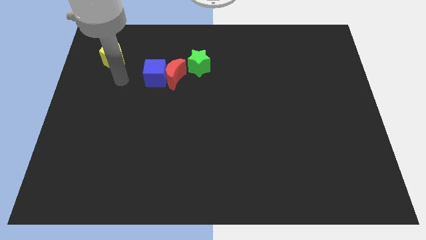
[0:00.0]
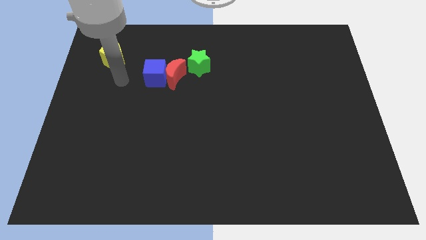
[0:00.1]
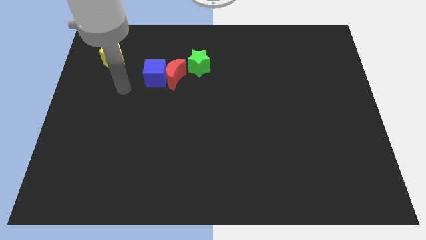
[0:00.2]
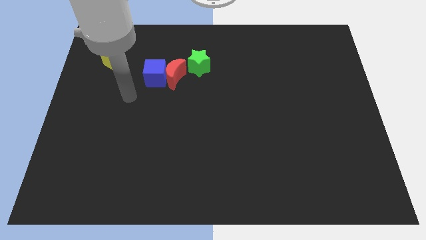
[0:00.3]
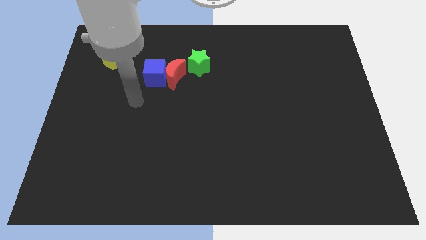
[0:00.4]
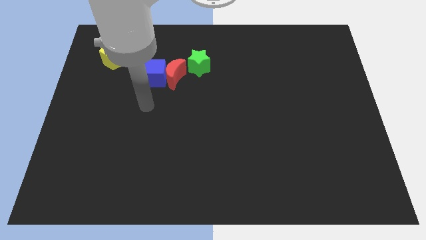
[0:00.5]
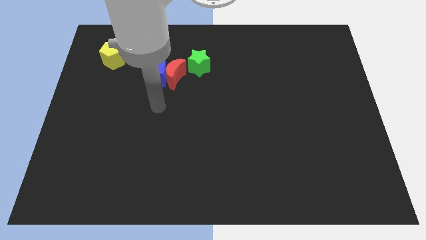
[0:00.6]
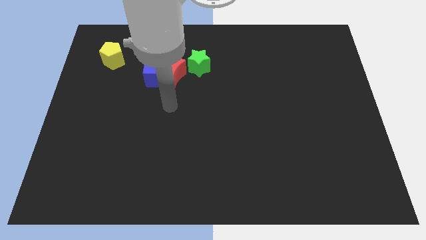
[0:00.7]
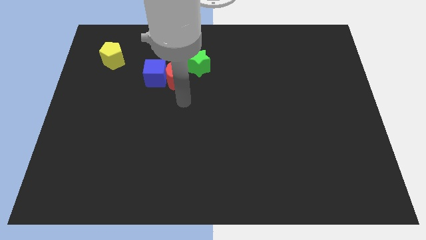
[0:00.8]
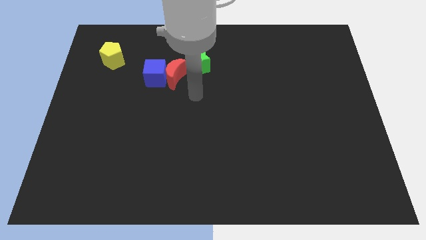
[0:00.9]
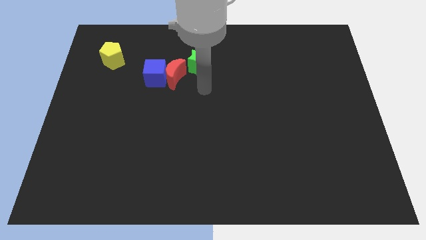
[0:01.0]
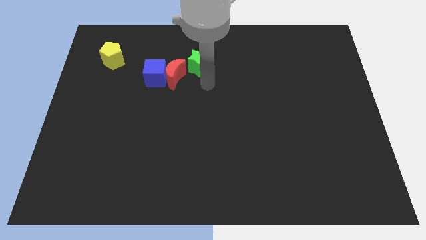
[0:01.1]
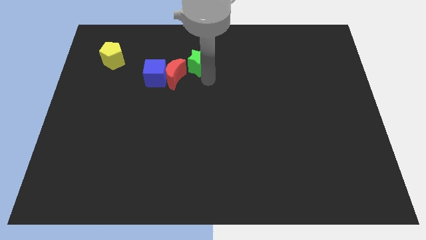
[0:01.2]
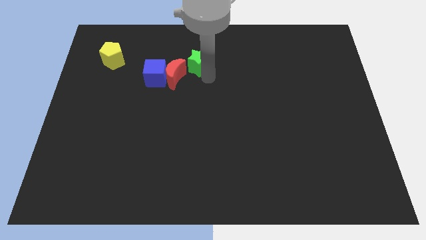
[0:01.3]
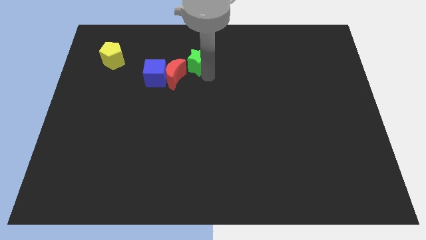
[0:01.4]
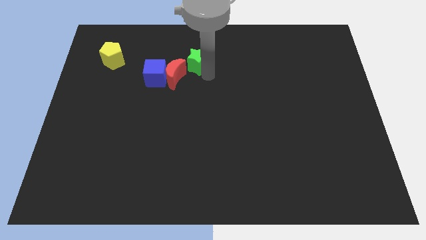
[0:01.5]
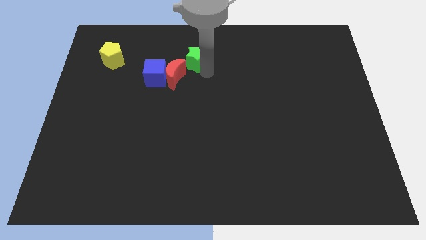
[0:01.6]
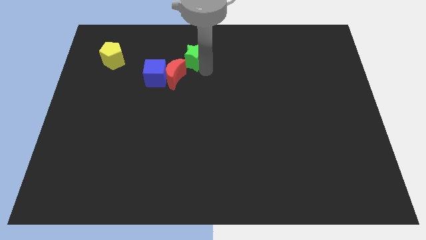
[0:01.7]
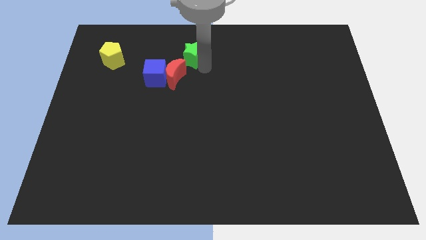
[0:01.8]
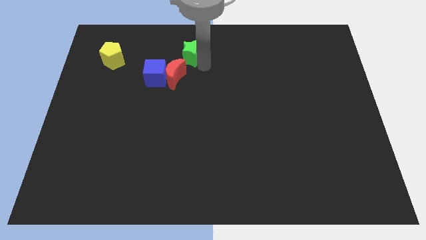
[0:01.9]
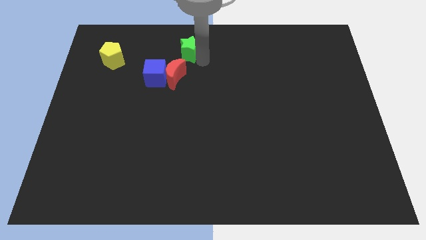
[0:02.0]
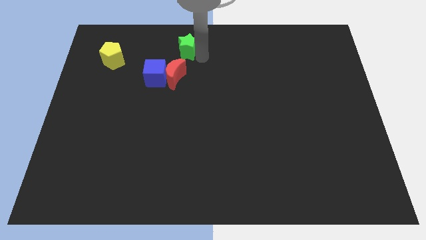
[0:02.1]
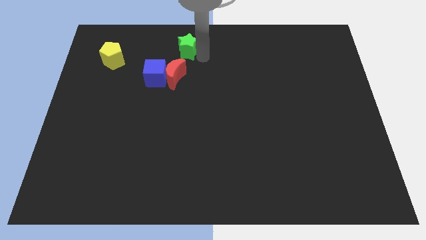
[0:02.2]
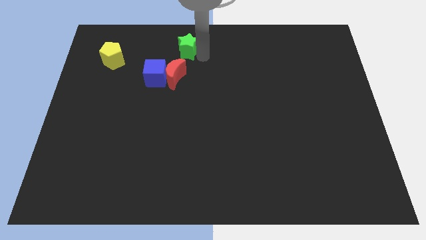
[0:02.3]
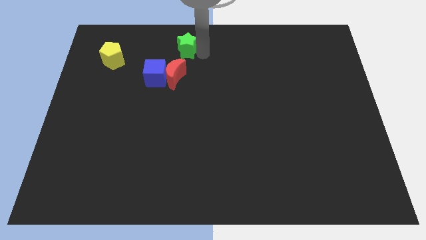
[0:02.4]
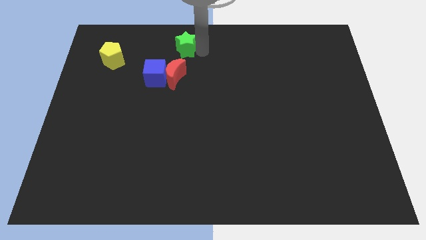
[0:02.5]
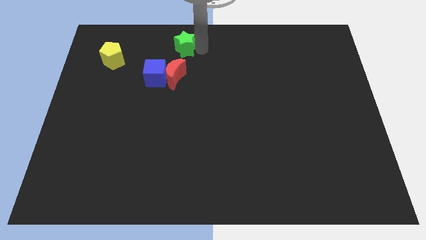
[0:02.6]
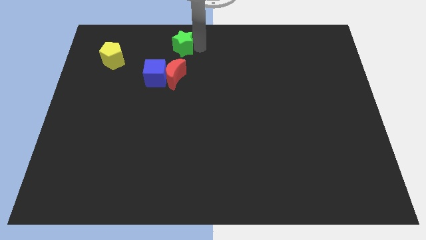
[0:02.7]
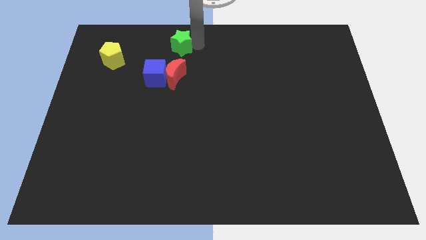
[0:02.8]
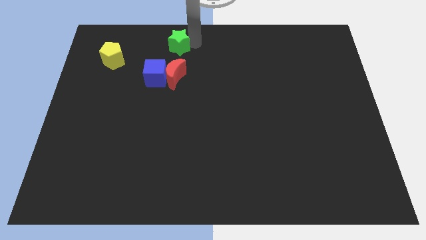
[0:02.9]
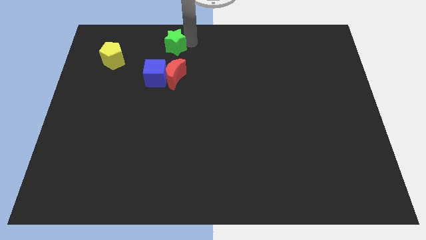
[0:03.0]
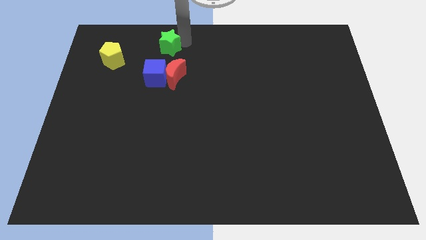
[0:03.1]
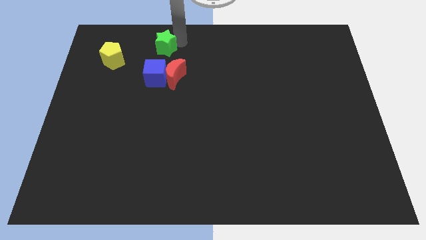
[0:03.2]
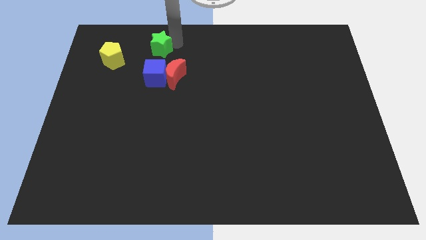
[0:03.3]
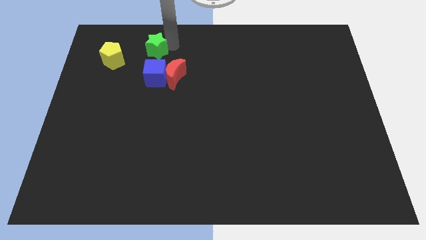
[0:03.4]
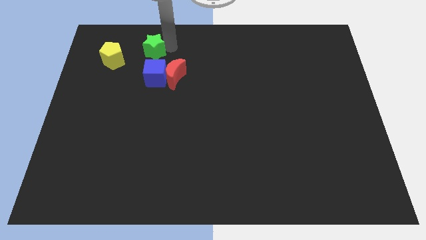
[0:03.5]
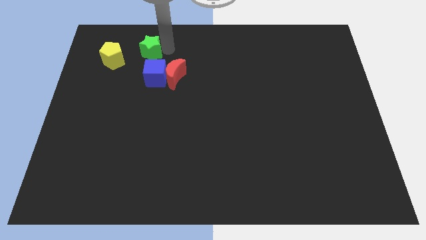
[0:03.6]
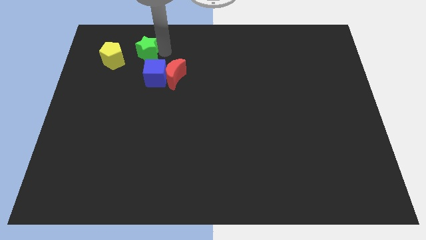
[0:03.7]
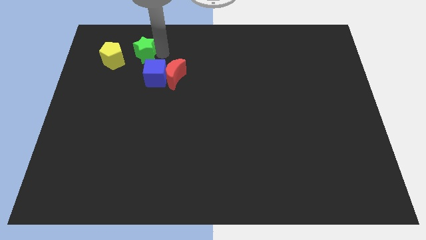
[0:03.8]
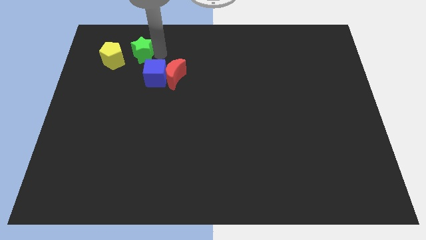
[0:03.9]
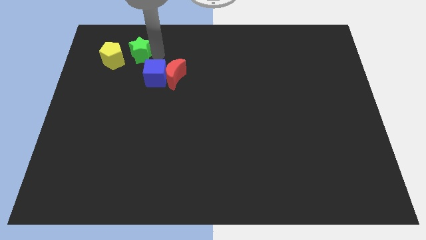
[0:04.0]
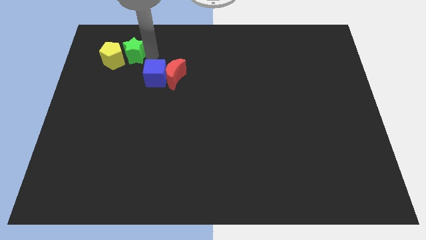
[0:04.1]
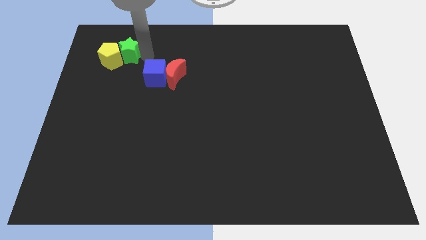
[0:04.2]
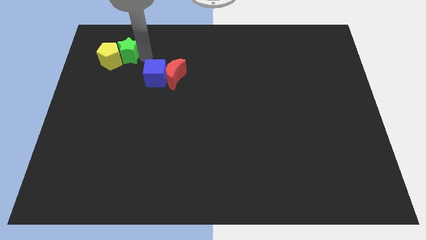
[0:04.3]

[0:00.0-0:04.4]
move the star to the pentagon

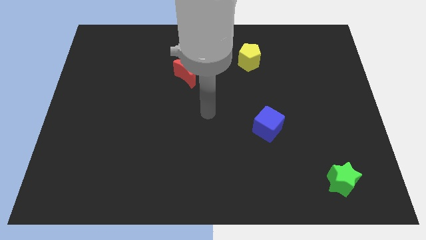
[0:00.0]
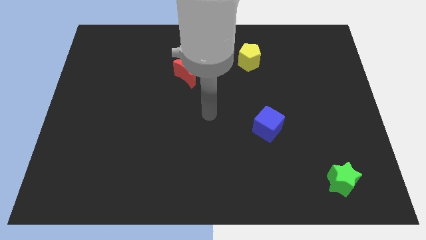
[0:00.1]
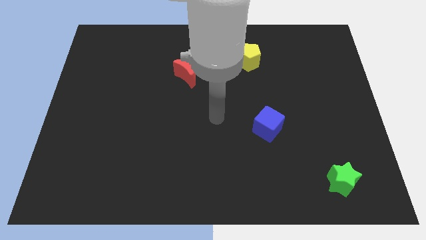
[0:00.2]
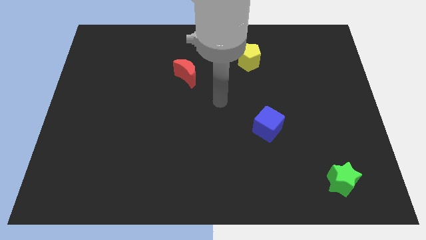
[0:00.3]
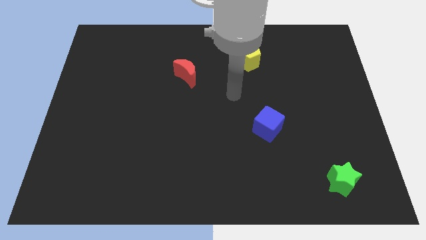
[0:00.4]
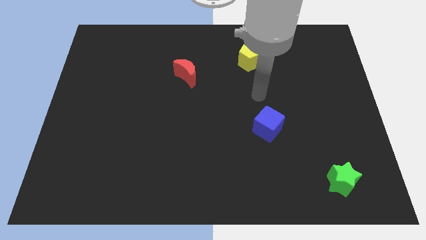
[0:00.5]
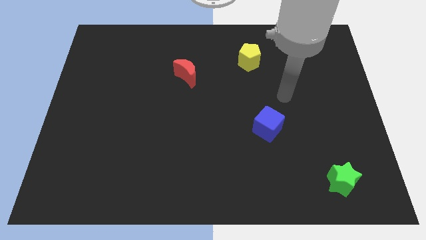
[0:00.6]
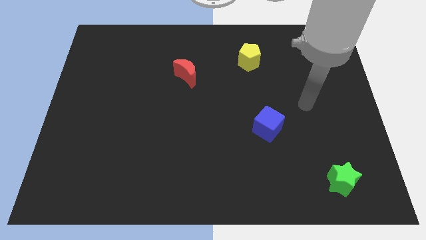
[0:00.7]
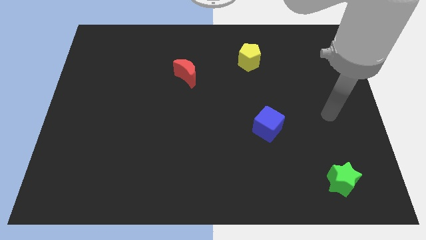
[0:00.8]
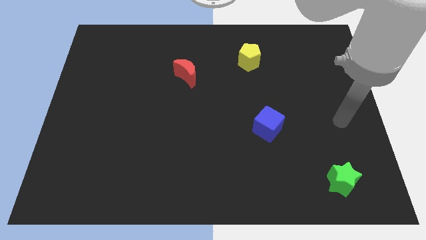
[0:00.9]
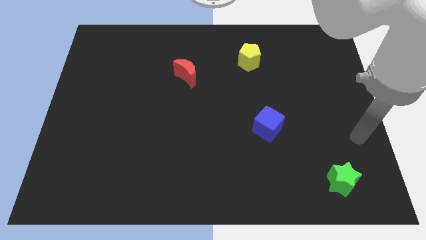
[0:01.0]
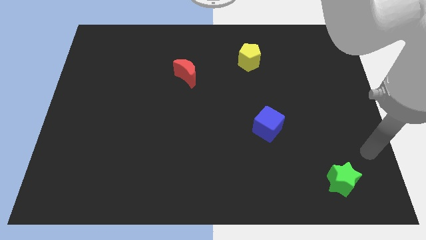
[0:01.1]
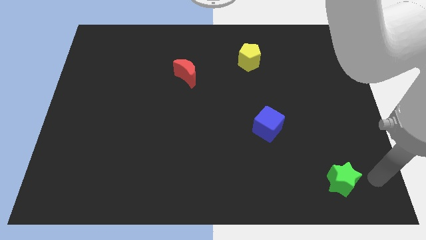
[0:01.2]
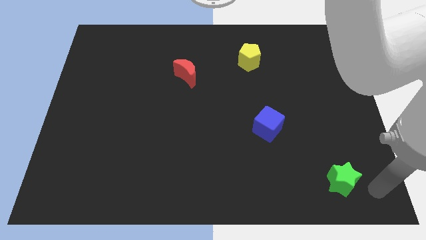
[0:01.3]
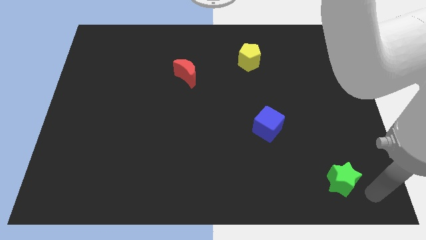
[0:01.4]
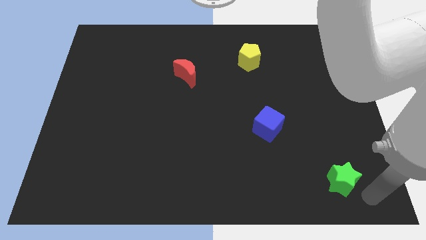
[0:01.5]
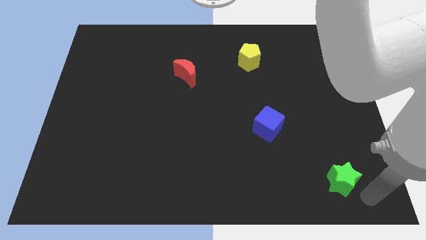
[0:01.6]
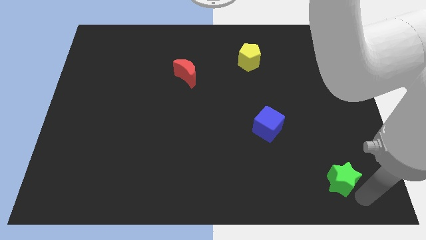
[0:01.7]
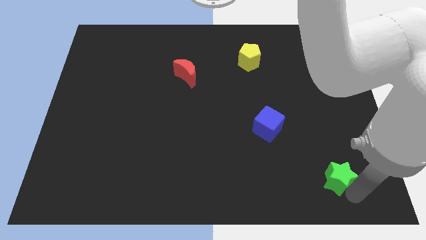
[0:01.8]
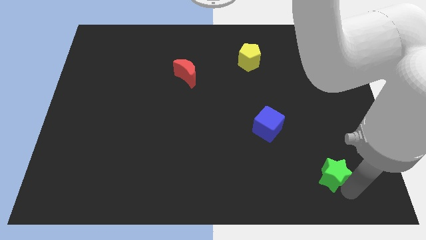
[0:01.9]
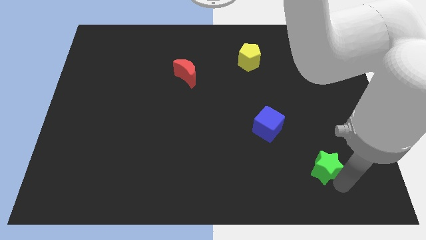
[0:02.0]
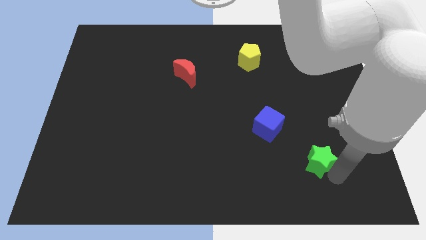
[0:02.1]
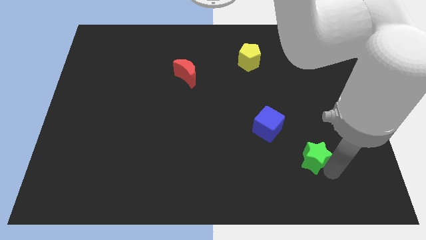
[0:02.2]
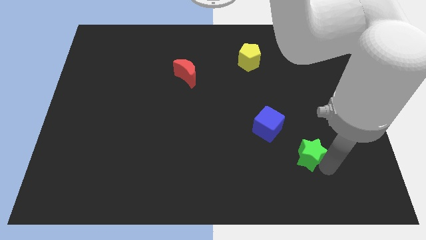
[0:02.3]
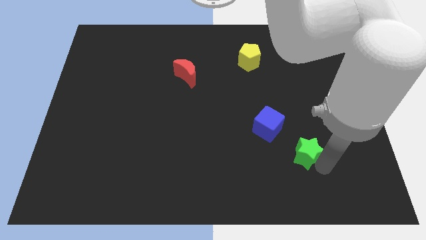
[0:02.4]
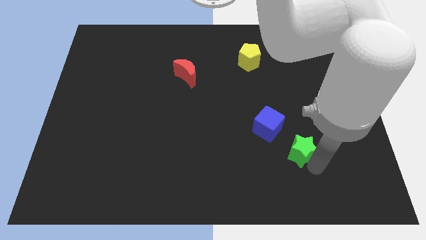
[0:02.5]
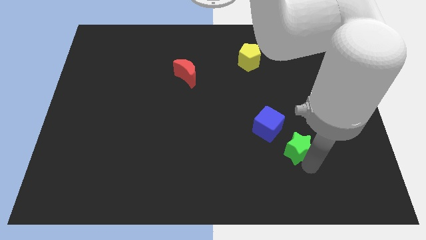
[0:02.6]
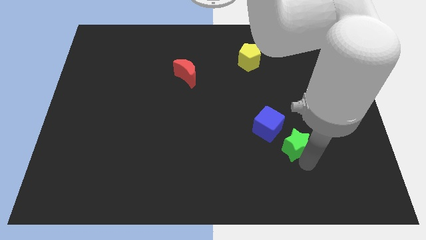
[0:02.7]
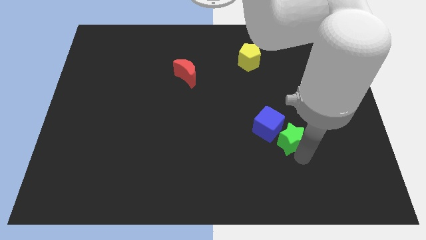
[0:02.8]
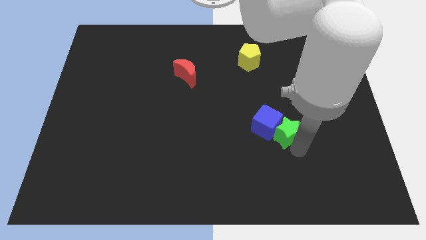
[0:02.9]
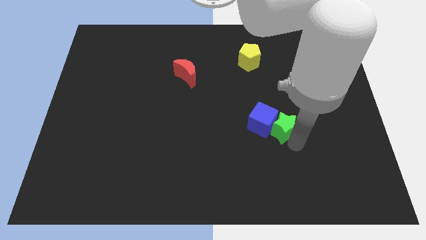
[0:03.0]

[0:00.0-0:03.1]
put the green star towards the blue cube

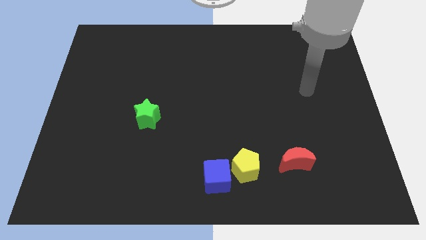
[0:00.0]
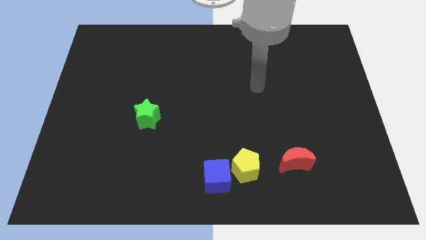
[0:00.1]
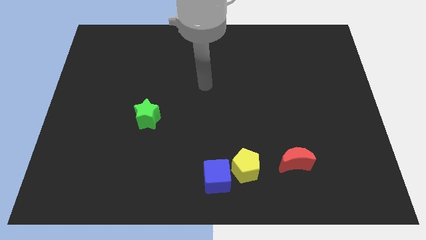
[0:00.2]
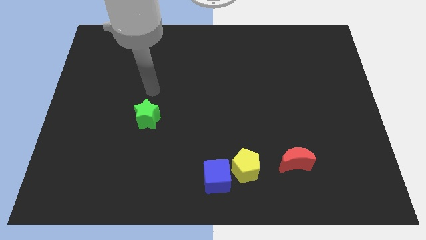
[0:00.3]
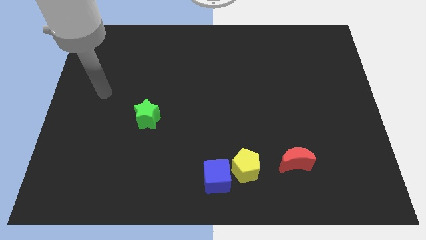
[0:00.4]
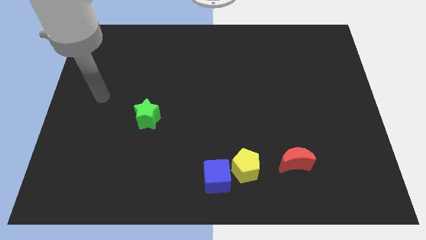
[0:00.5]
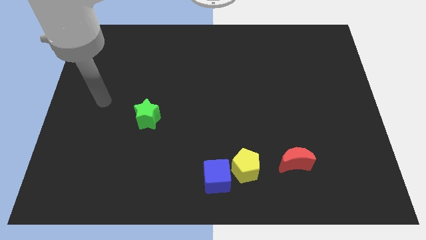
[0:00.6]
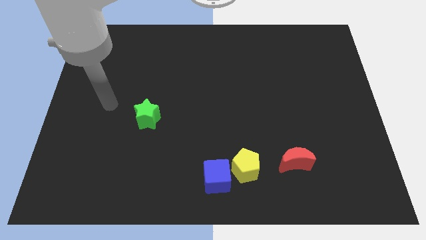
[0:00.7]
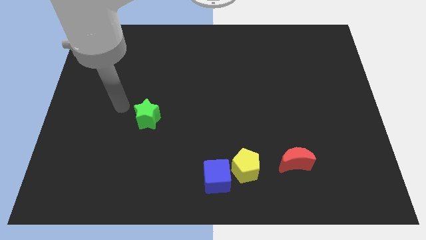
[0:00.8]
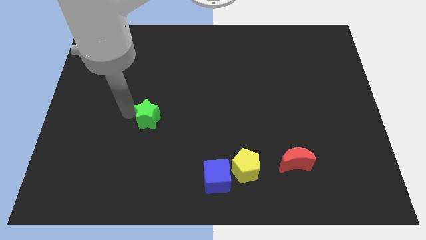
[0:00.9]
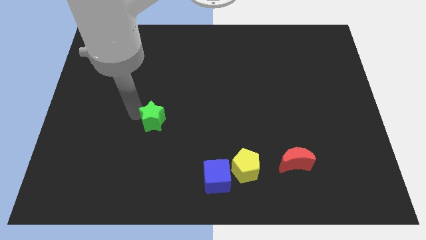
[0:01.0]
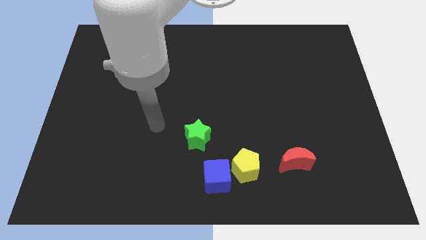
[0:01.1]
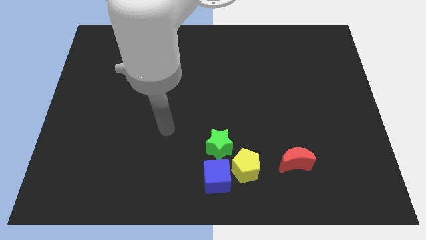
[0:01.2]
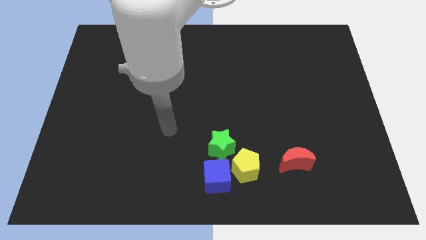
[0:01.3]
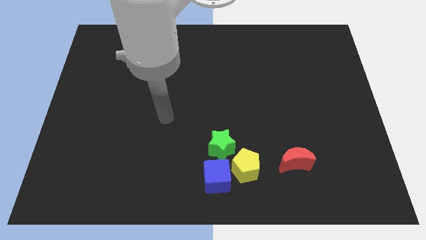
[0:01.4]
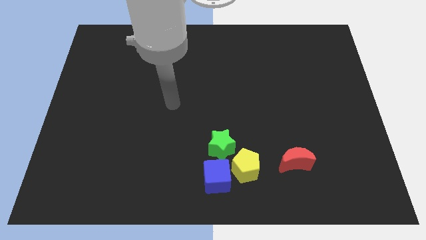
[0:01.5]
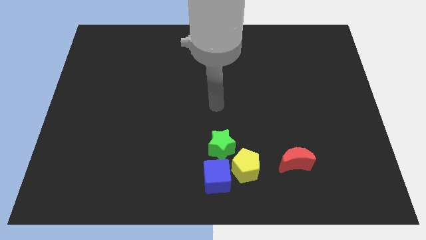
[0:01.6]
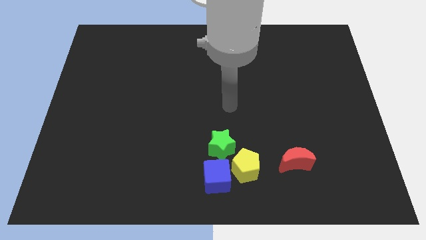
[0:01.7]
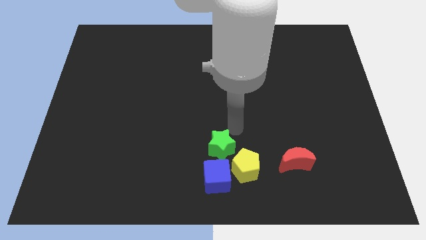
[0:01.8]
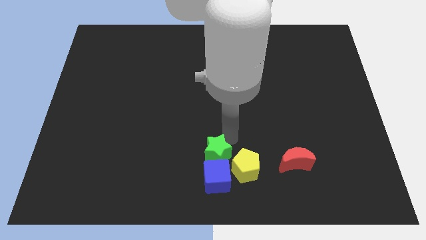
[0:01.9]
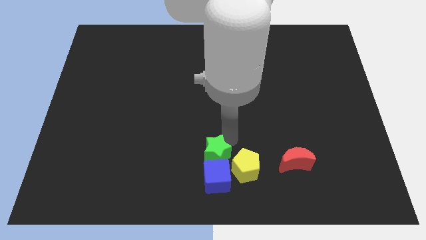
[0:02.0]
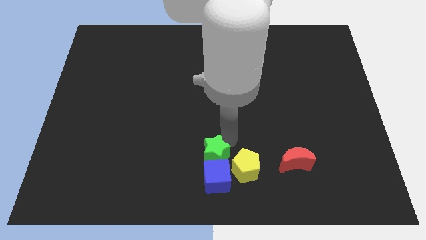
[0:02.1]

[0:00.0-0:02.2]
push the green block close to the blue cube
